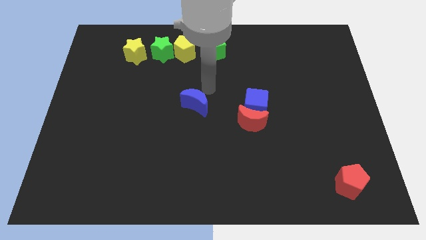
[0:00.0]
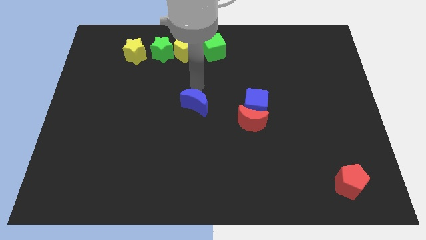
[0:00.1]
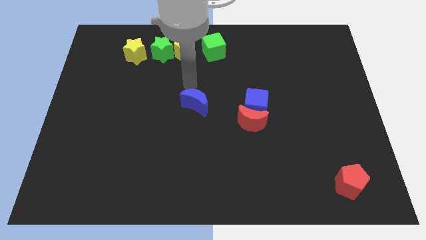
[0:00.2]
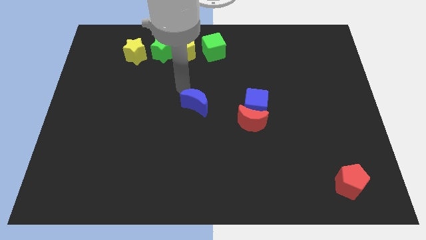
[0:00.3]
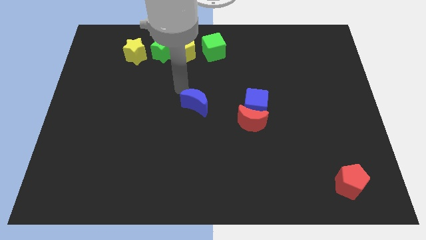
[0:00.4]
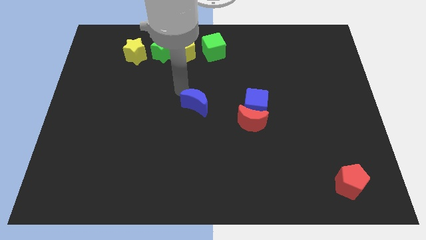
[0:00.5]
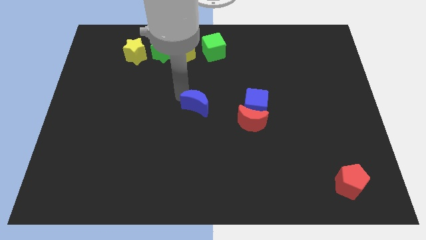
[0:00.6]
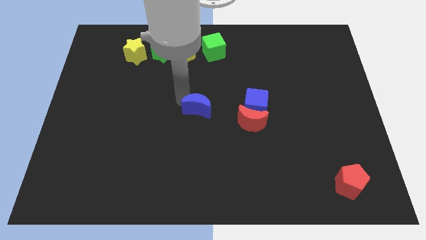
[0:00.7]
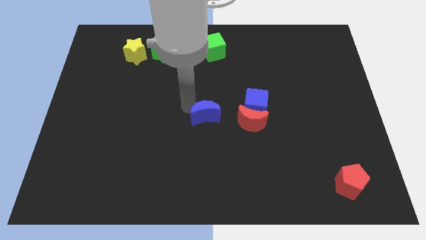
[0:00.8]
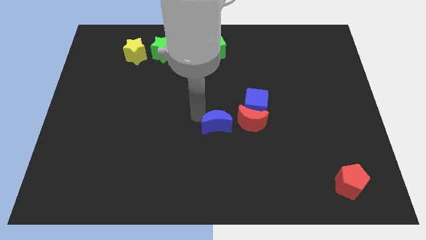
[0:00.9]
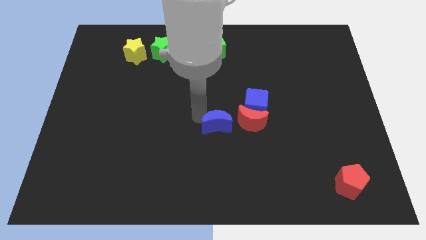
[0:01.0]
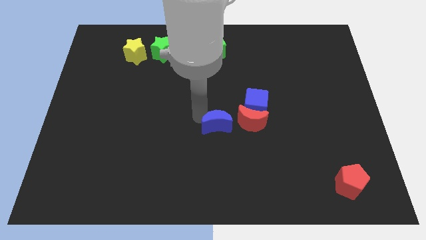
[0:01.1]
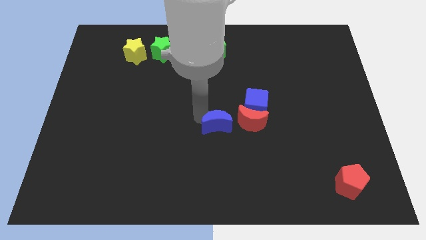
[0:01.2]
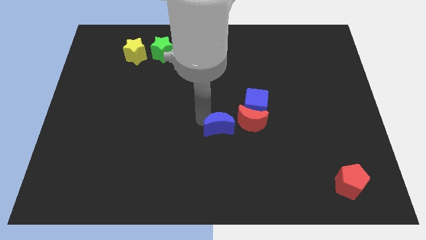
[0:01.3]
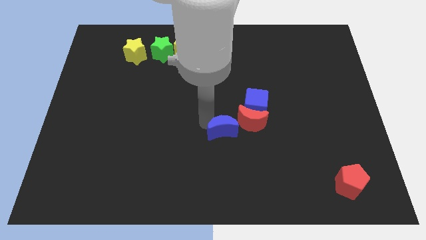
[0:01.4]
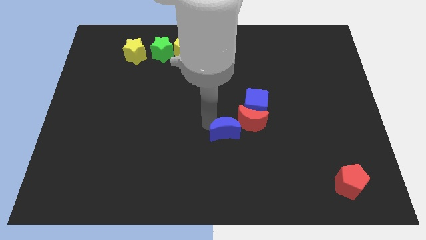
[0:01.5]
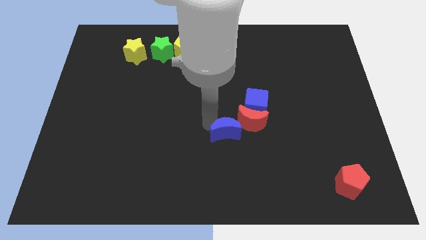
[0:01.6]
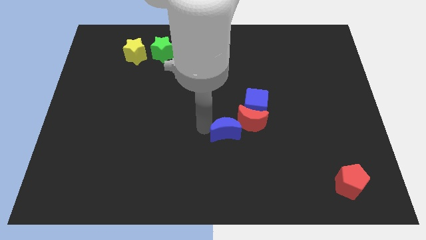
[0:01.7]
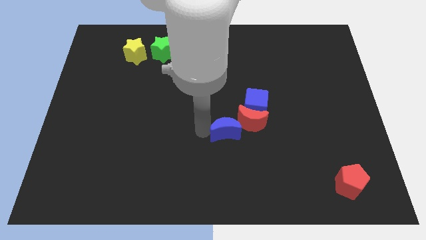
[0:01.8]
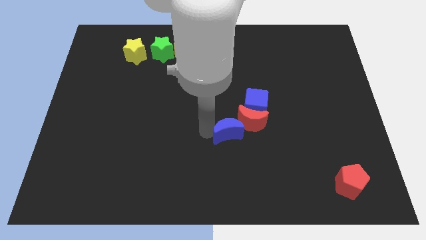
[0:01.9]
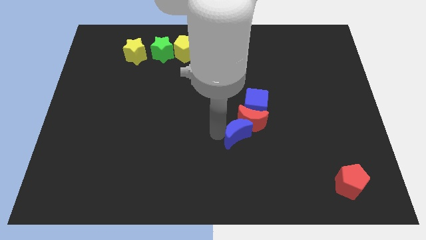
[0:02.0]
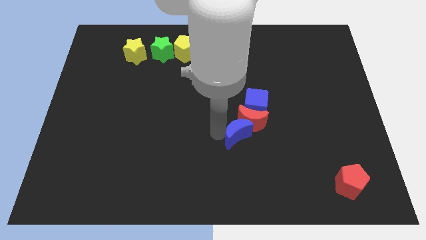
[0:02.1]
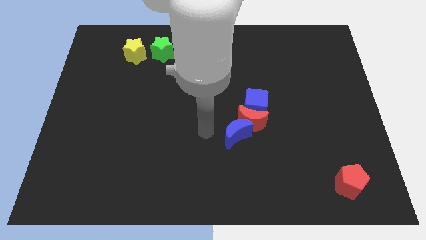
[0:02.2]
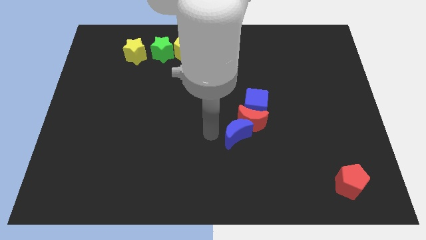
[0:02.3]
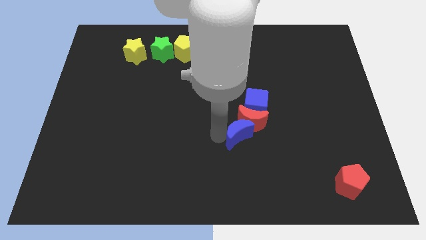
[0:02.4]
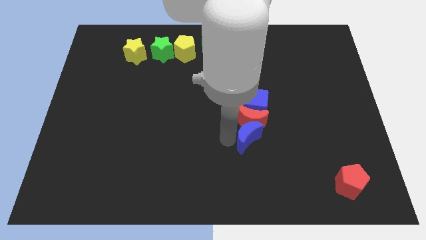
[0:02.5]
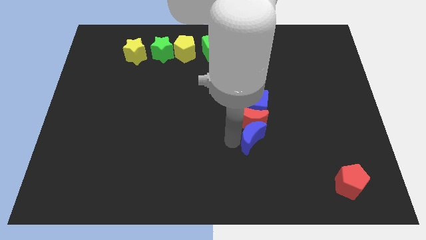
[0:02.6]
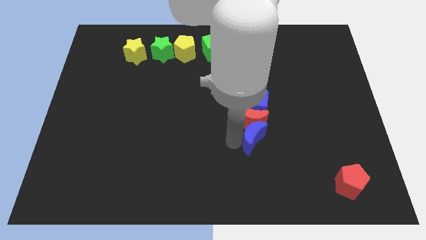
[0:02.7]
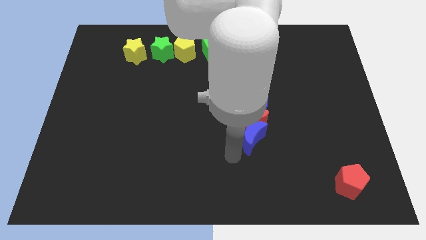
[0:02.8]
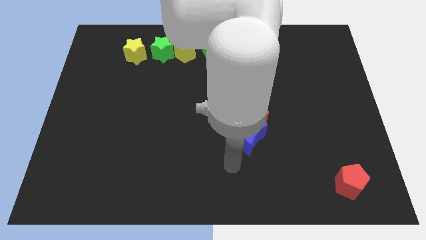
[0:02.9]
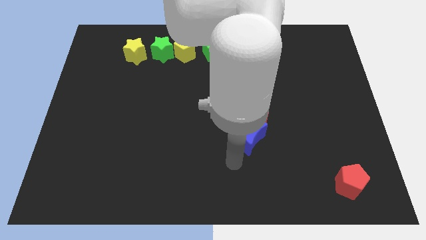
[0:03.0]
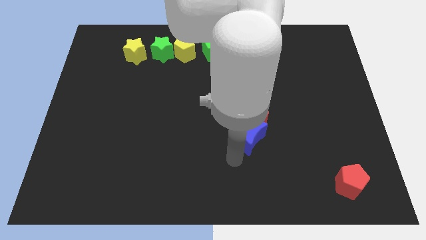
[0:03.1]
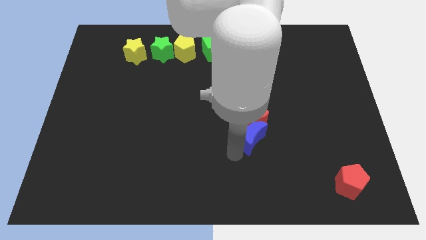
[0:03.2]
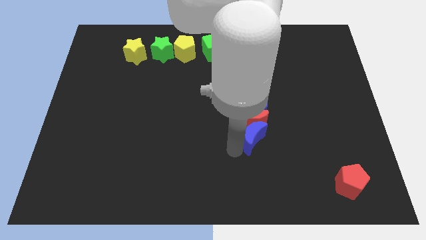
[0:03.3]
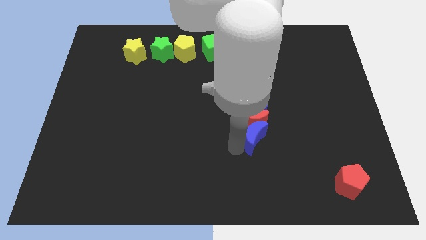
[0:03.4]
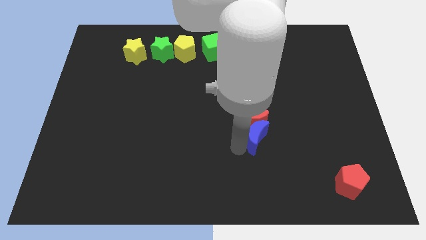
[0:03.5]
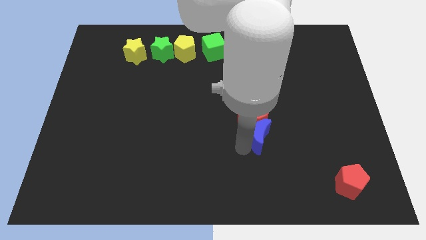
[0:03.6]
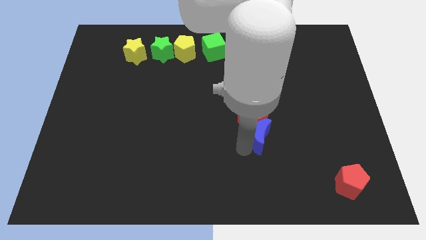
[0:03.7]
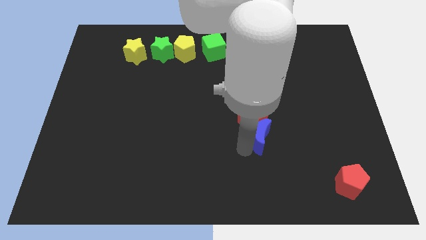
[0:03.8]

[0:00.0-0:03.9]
place the blue moon below the red moon

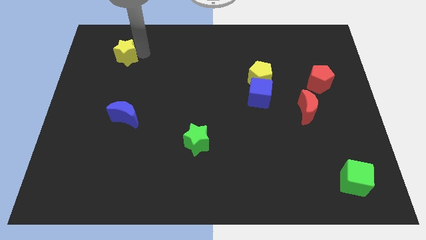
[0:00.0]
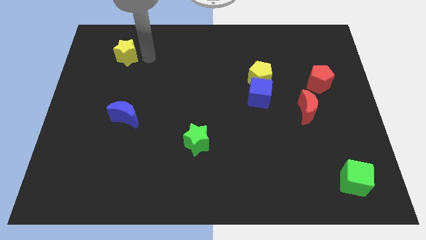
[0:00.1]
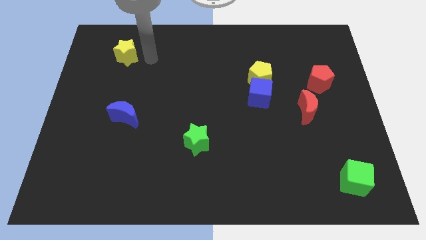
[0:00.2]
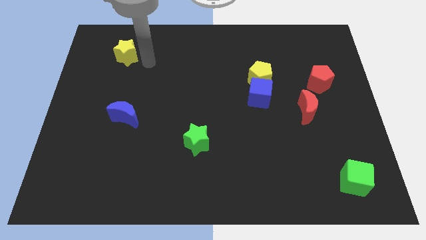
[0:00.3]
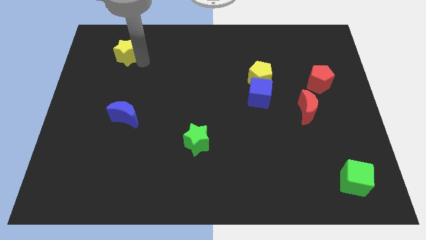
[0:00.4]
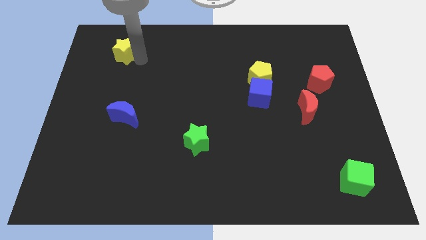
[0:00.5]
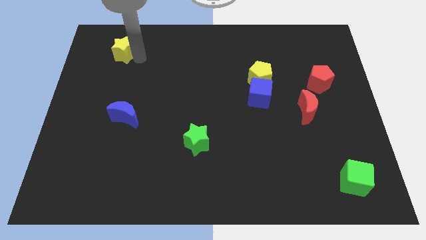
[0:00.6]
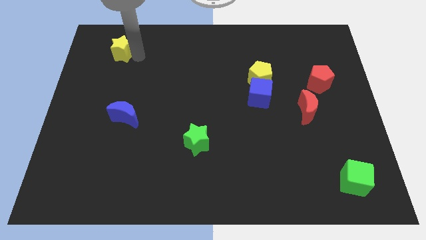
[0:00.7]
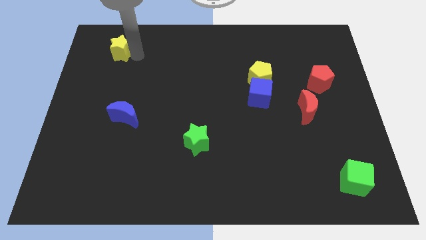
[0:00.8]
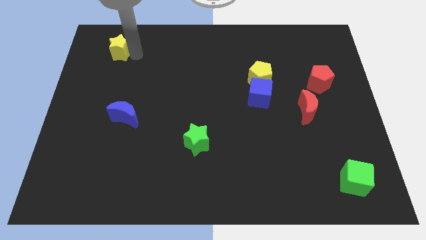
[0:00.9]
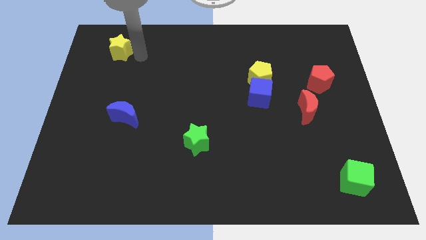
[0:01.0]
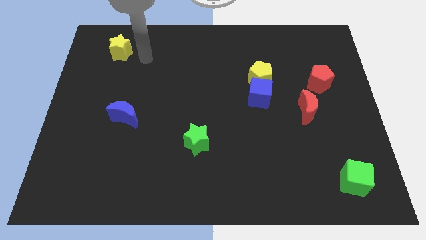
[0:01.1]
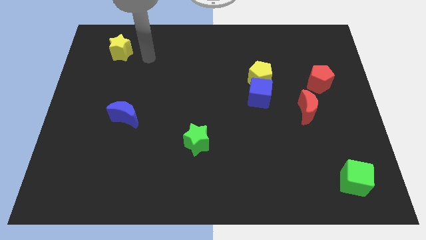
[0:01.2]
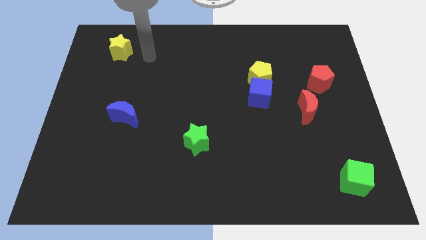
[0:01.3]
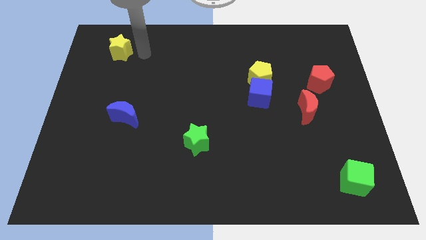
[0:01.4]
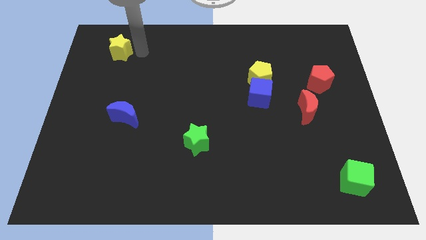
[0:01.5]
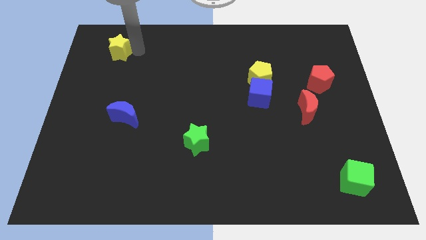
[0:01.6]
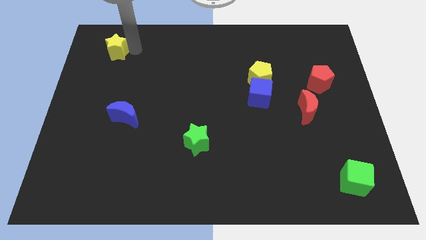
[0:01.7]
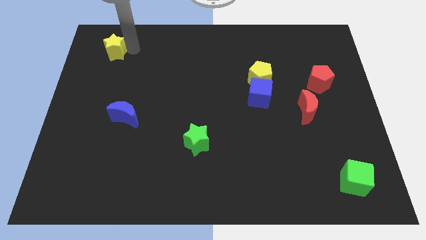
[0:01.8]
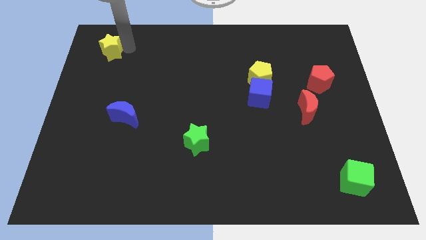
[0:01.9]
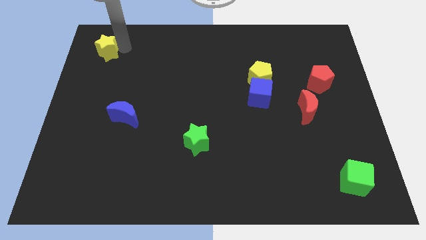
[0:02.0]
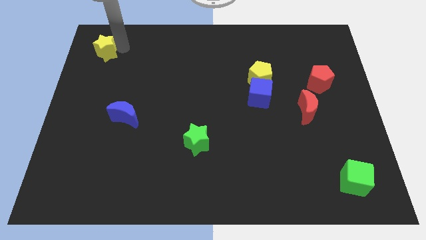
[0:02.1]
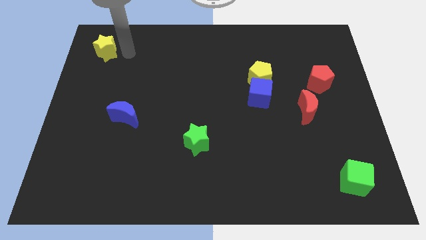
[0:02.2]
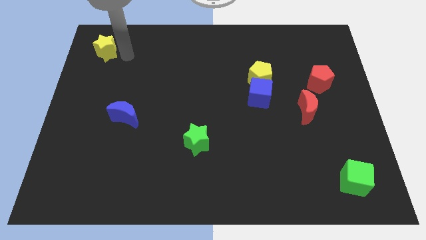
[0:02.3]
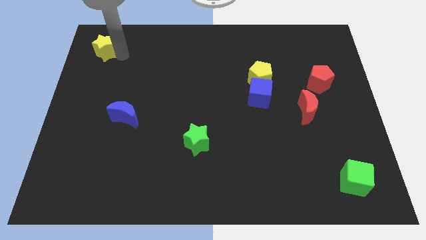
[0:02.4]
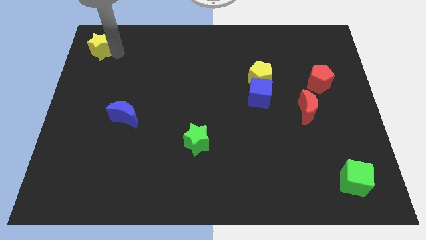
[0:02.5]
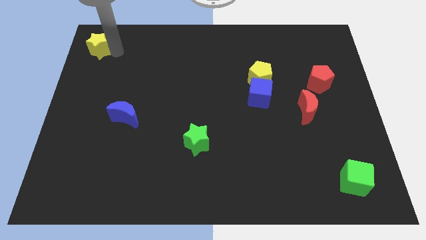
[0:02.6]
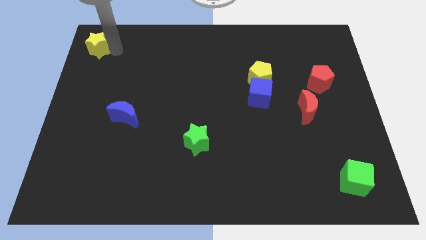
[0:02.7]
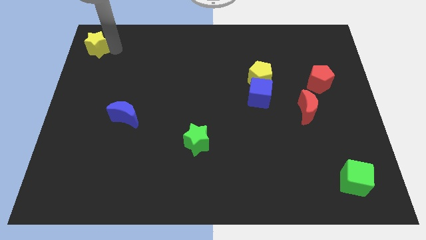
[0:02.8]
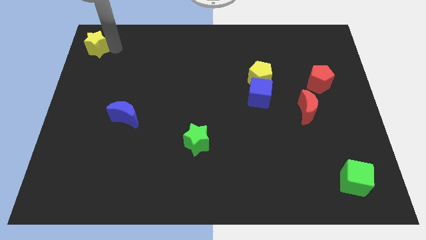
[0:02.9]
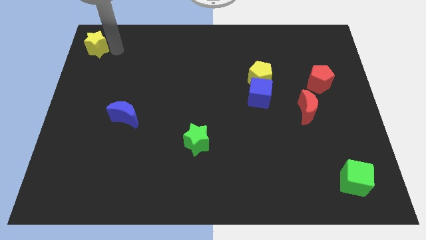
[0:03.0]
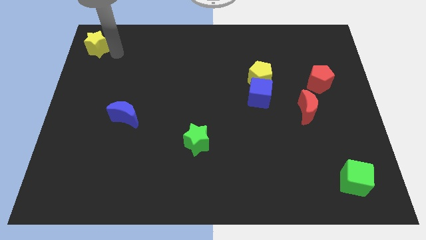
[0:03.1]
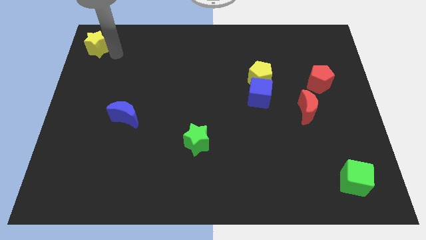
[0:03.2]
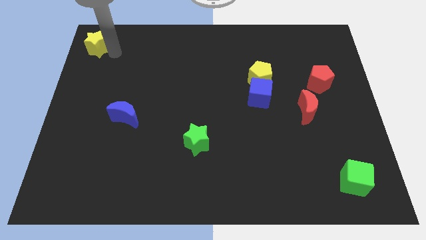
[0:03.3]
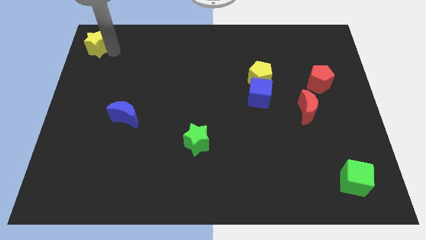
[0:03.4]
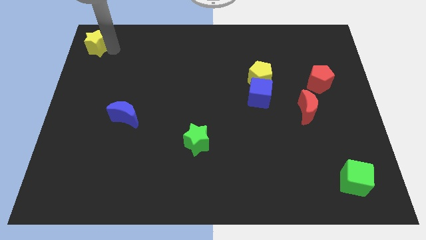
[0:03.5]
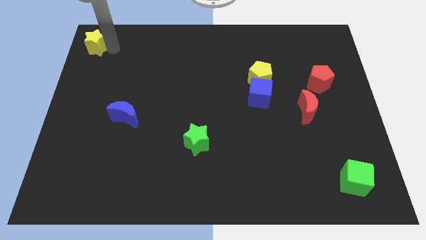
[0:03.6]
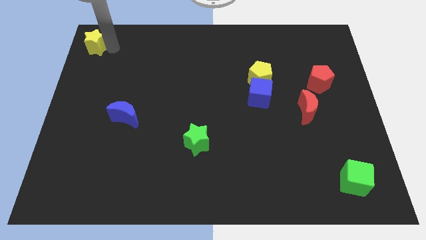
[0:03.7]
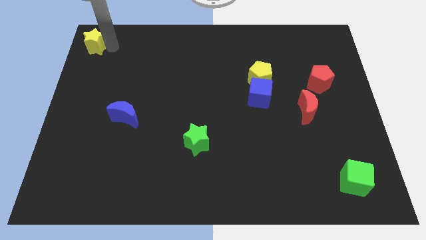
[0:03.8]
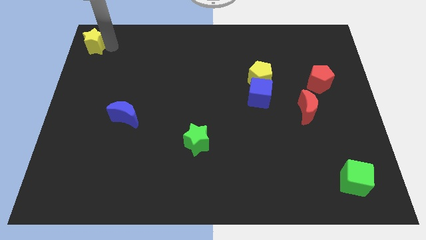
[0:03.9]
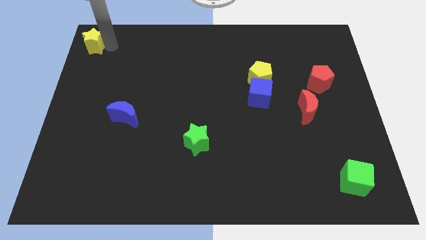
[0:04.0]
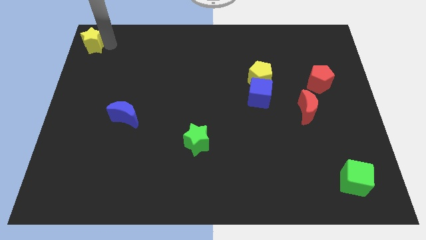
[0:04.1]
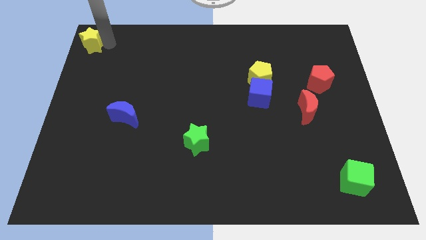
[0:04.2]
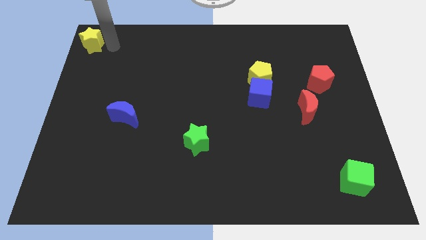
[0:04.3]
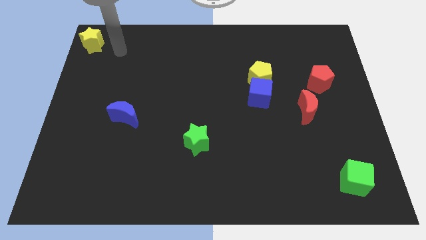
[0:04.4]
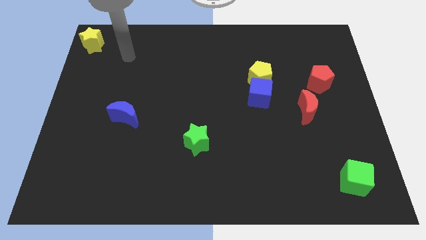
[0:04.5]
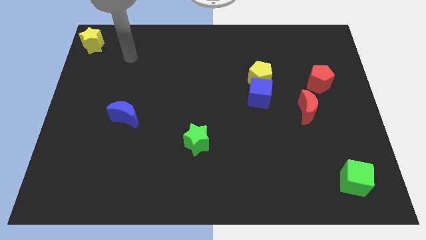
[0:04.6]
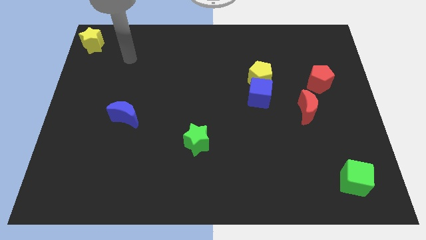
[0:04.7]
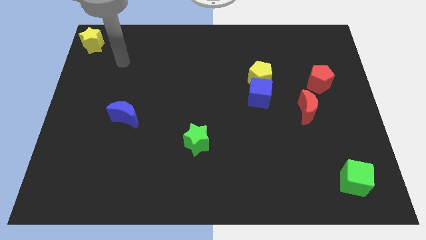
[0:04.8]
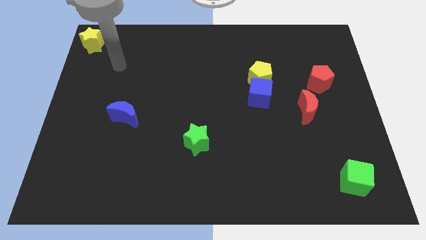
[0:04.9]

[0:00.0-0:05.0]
move the yellow star to the top left corner of the board

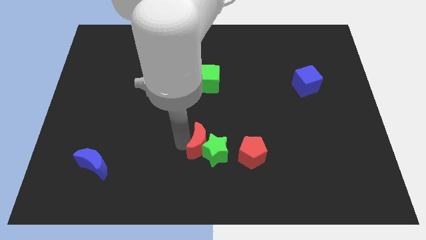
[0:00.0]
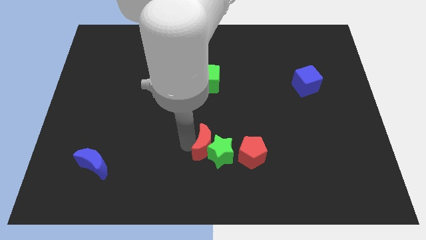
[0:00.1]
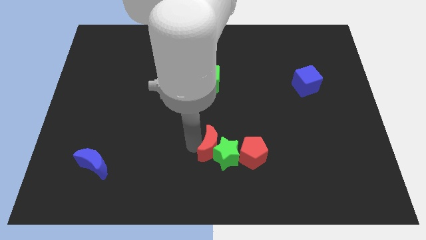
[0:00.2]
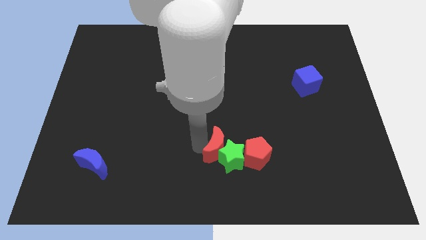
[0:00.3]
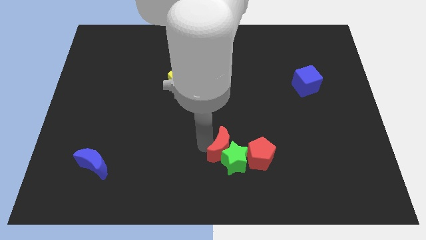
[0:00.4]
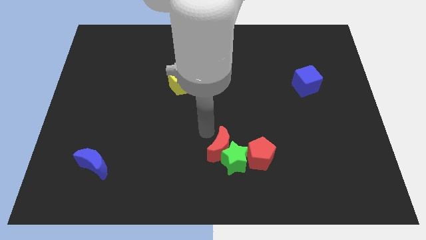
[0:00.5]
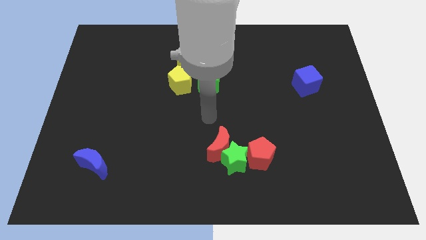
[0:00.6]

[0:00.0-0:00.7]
place red crescent and green star into red pentagon
